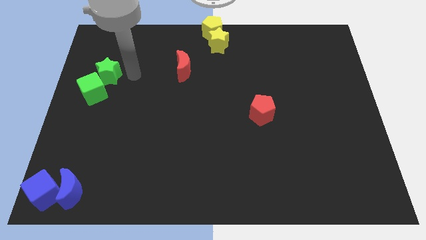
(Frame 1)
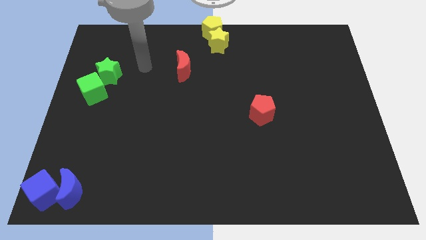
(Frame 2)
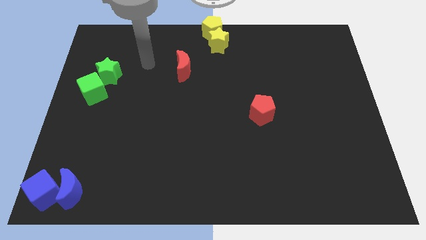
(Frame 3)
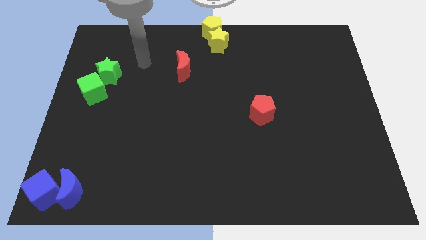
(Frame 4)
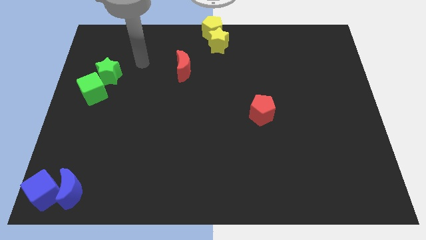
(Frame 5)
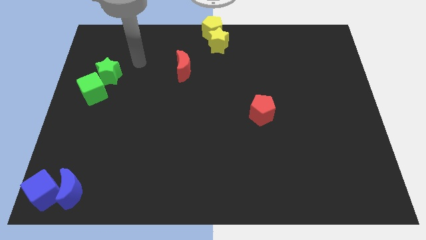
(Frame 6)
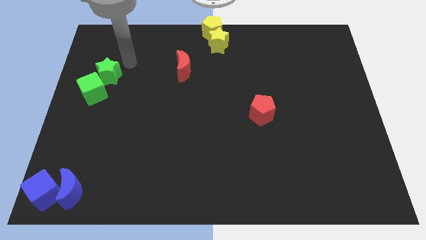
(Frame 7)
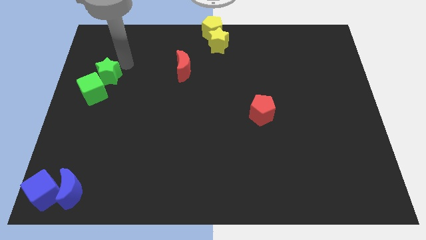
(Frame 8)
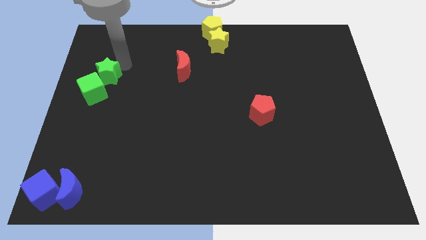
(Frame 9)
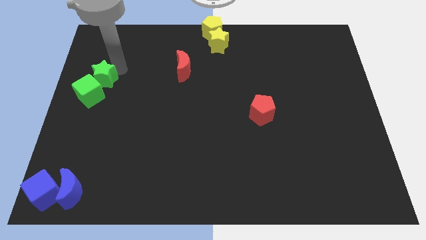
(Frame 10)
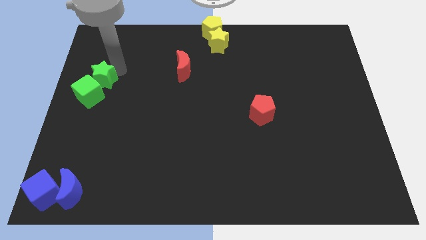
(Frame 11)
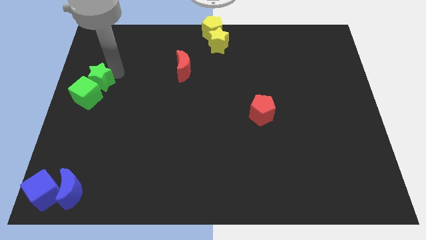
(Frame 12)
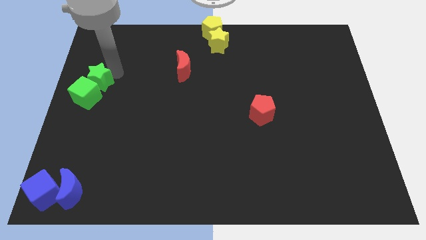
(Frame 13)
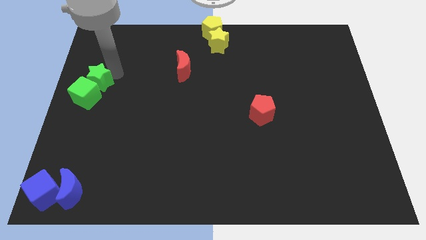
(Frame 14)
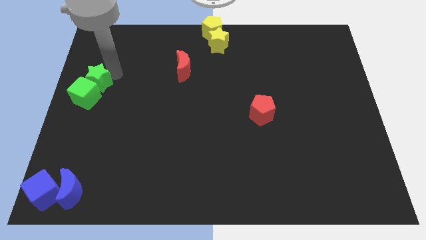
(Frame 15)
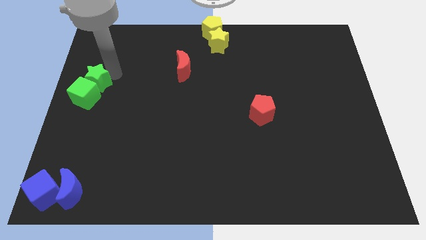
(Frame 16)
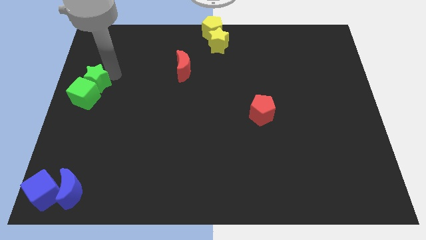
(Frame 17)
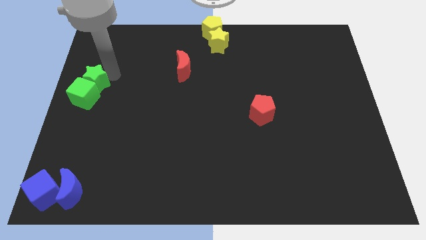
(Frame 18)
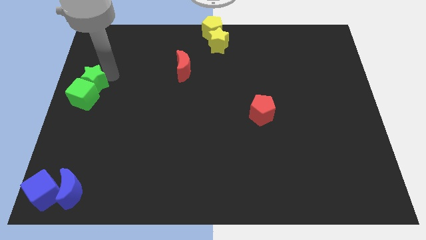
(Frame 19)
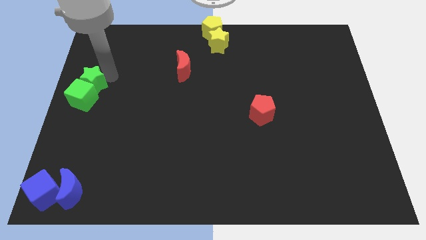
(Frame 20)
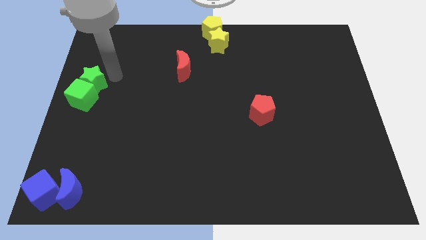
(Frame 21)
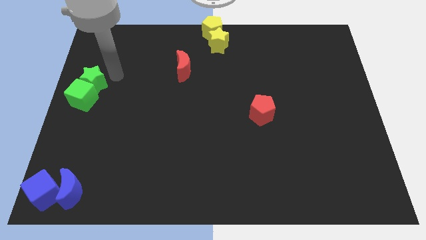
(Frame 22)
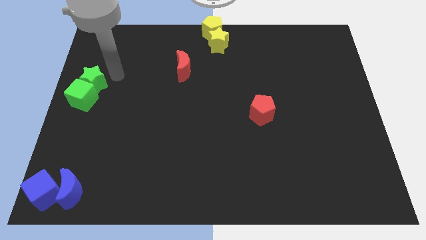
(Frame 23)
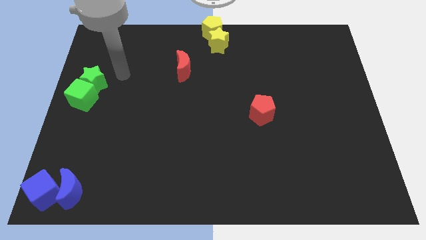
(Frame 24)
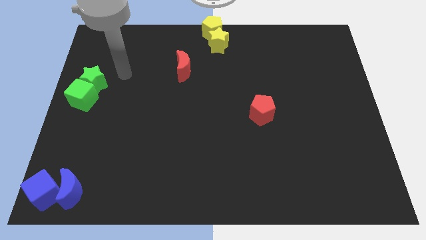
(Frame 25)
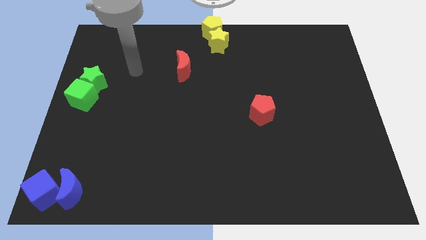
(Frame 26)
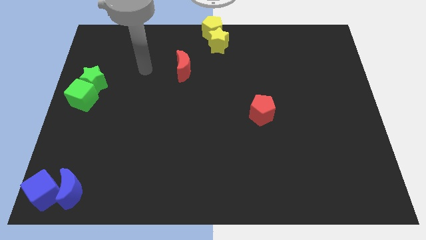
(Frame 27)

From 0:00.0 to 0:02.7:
move the green blocks center left corner of the board

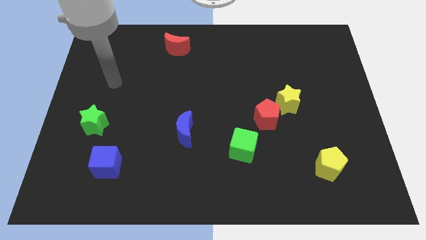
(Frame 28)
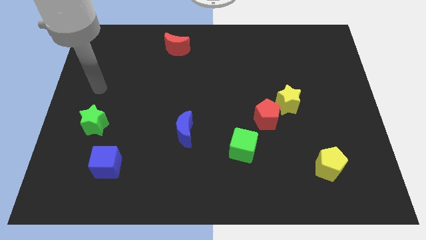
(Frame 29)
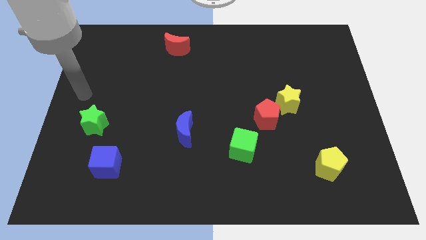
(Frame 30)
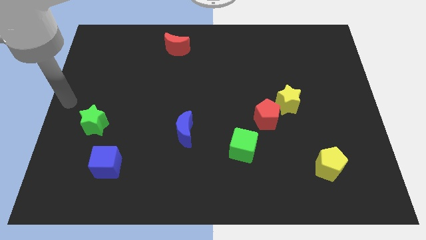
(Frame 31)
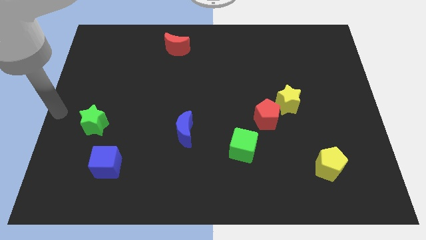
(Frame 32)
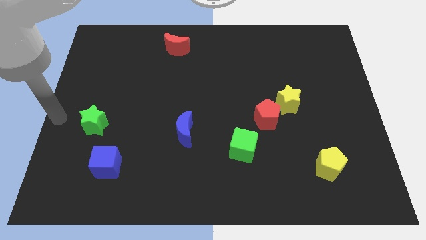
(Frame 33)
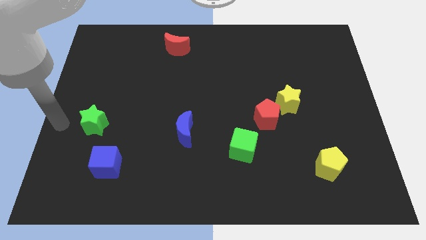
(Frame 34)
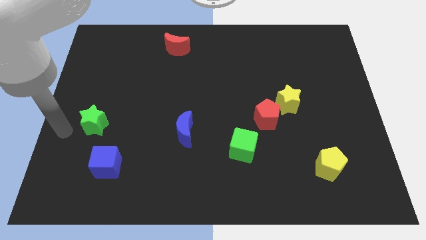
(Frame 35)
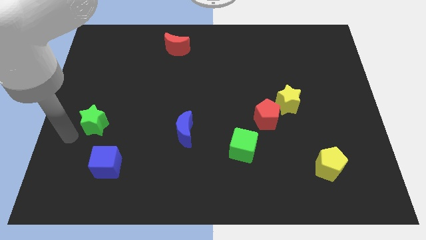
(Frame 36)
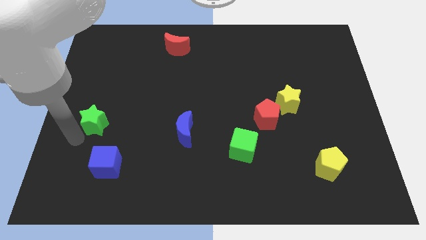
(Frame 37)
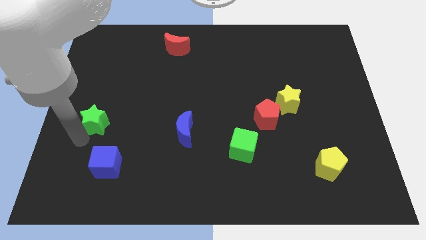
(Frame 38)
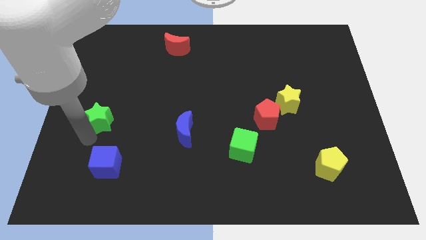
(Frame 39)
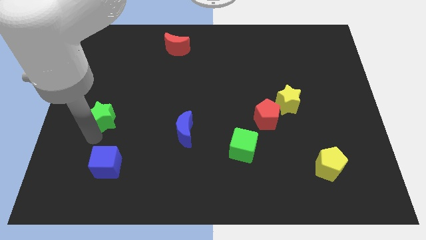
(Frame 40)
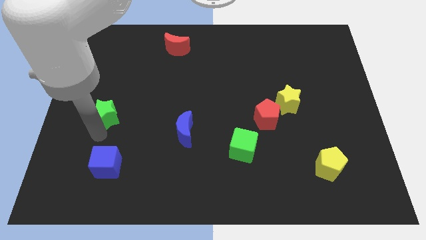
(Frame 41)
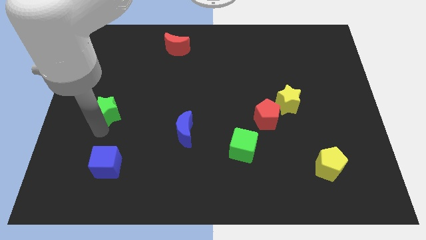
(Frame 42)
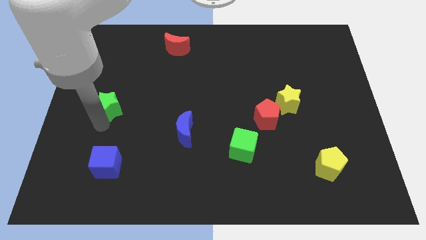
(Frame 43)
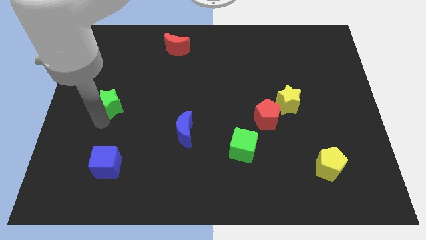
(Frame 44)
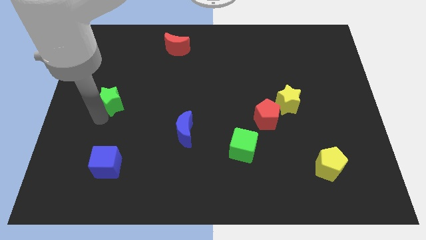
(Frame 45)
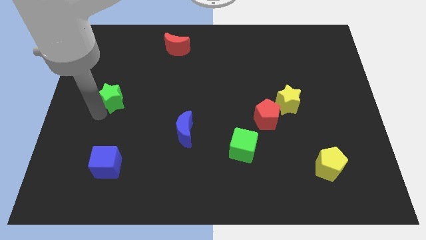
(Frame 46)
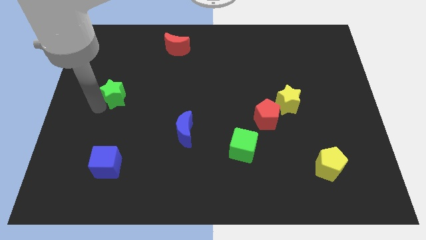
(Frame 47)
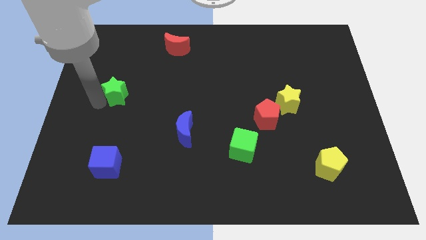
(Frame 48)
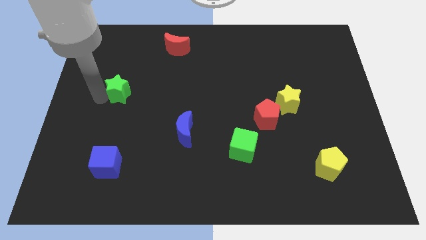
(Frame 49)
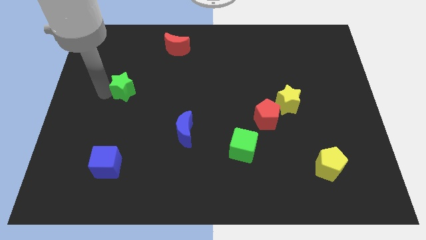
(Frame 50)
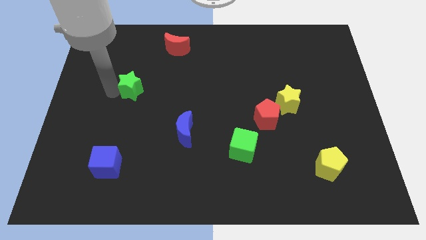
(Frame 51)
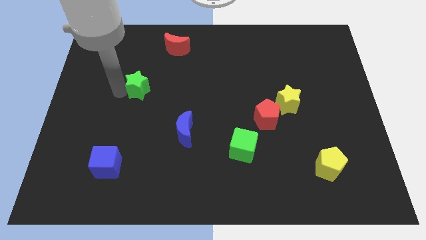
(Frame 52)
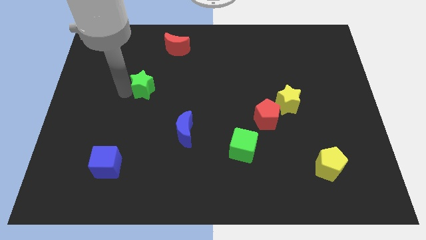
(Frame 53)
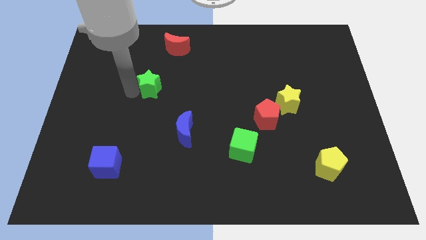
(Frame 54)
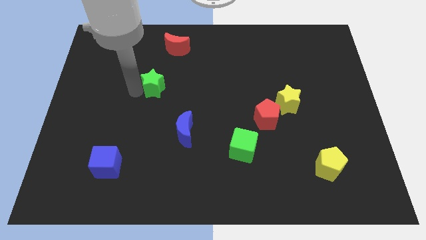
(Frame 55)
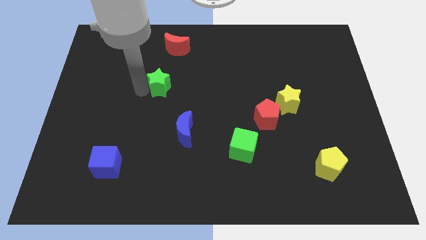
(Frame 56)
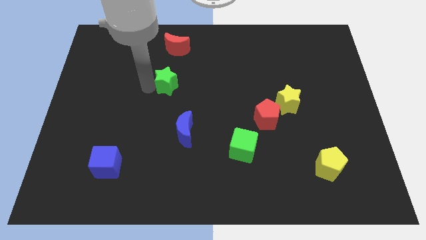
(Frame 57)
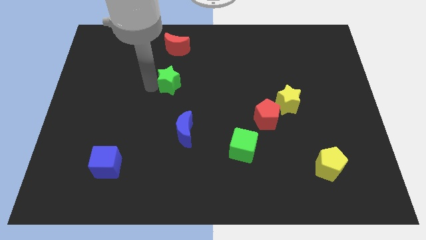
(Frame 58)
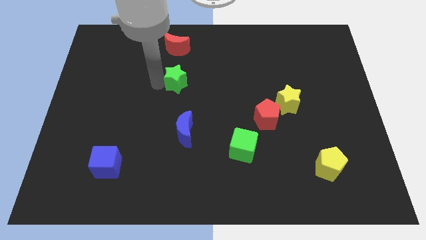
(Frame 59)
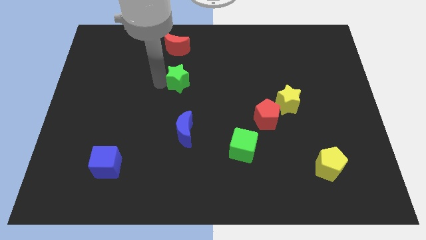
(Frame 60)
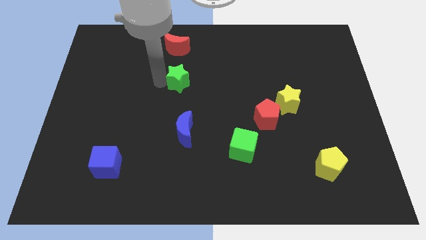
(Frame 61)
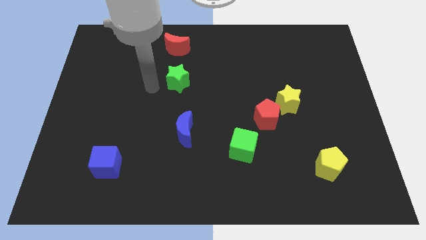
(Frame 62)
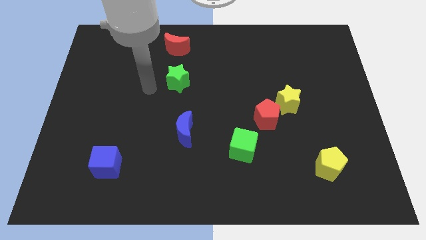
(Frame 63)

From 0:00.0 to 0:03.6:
place the green star below the red crescent

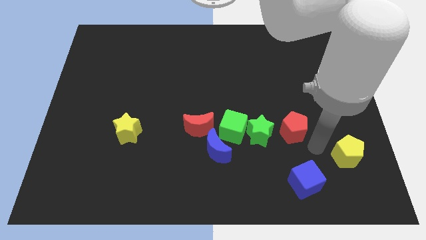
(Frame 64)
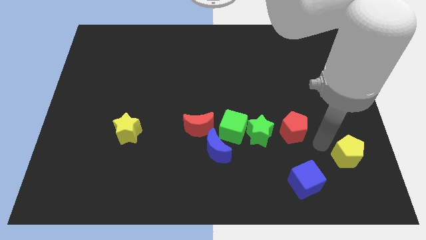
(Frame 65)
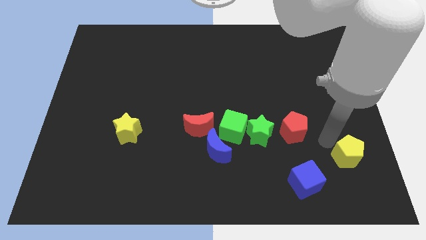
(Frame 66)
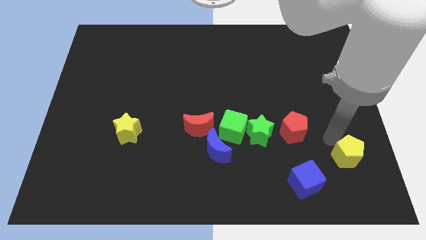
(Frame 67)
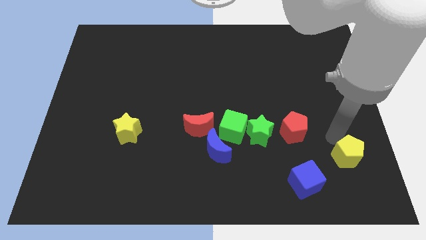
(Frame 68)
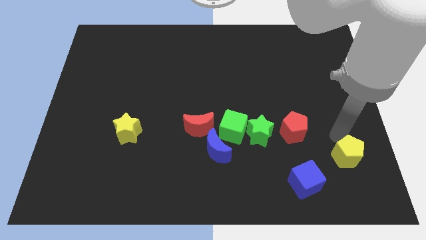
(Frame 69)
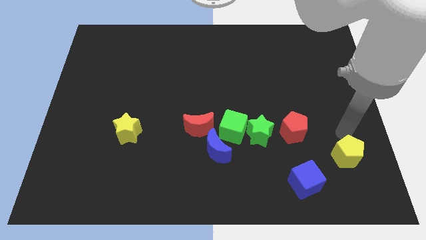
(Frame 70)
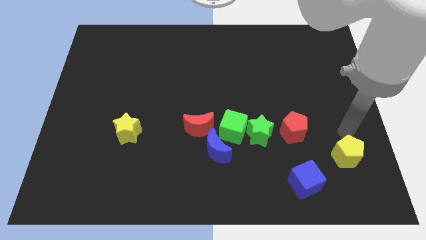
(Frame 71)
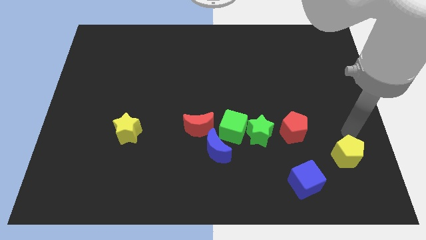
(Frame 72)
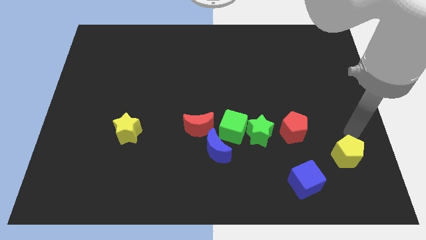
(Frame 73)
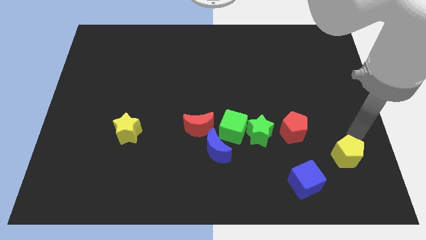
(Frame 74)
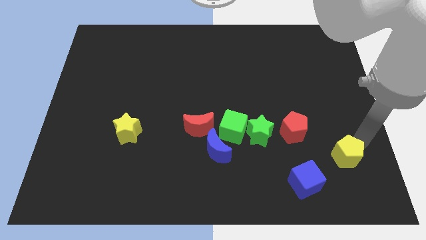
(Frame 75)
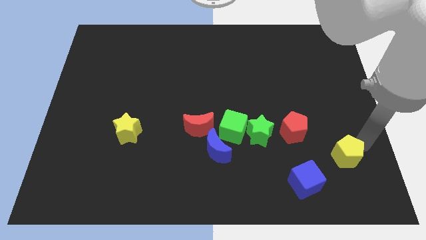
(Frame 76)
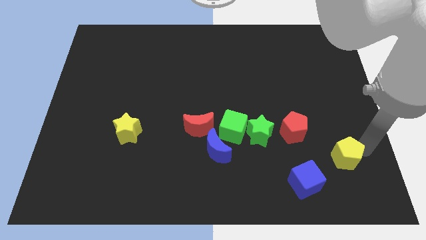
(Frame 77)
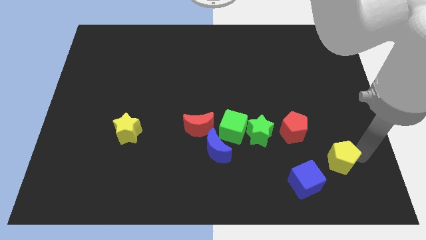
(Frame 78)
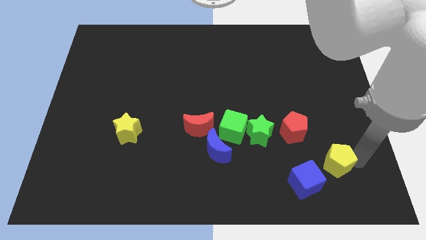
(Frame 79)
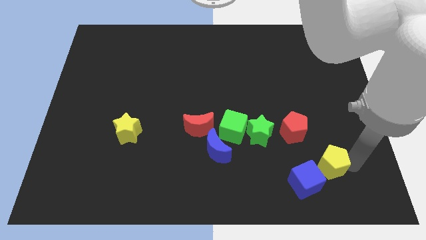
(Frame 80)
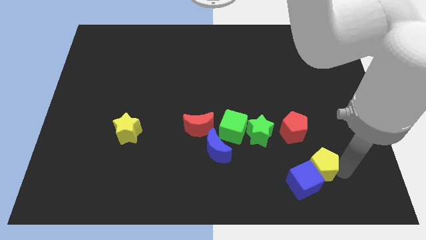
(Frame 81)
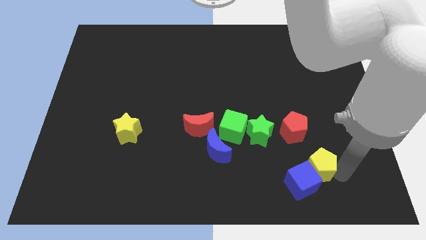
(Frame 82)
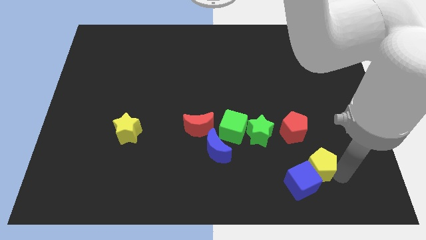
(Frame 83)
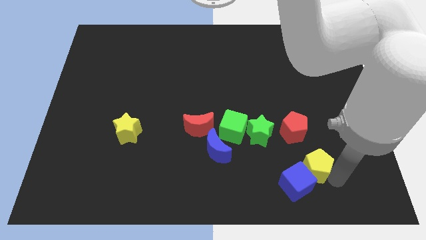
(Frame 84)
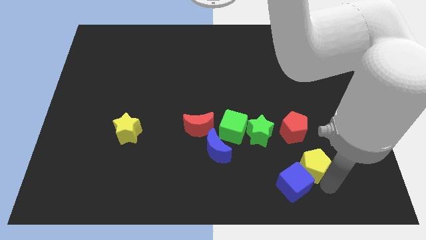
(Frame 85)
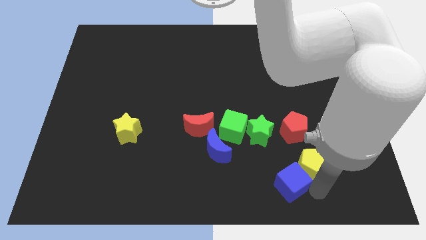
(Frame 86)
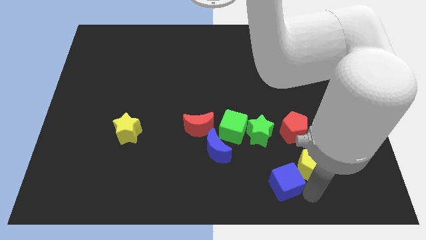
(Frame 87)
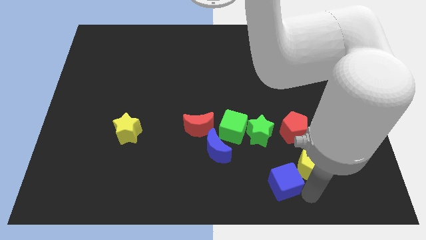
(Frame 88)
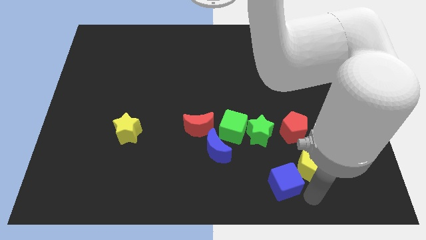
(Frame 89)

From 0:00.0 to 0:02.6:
push the yellow pentagon into blue cube

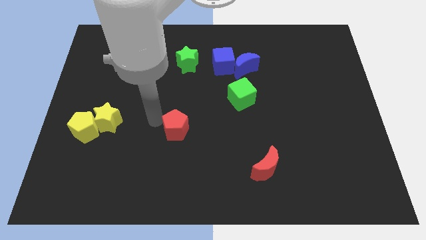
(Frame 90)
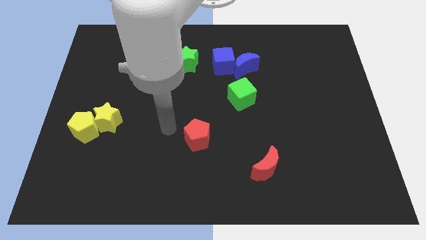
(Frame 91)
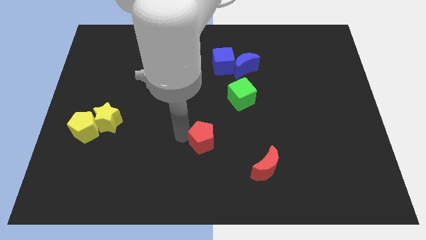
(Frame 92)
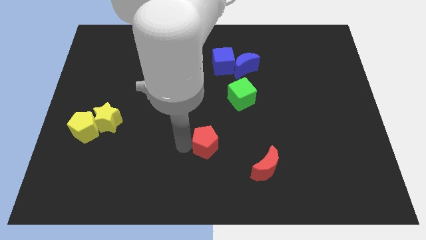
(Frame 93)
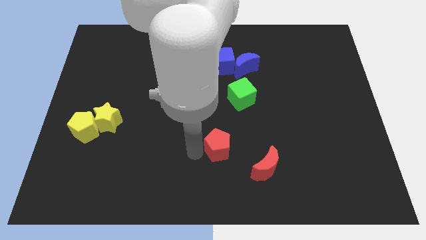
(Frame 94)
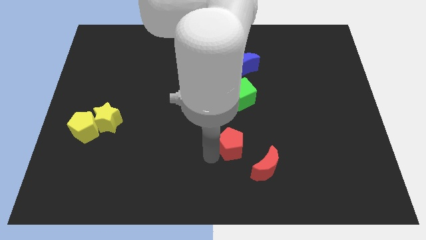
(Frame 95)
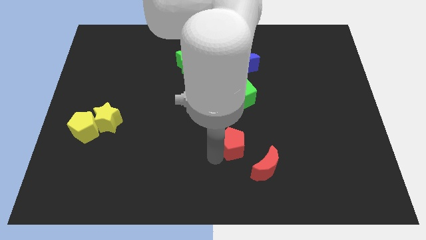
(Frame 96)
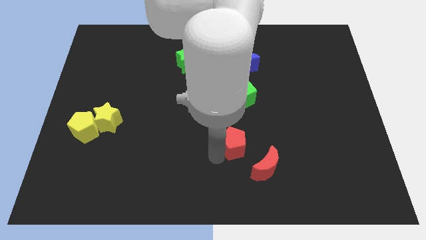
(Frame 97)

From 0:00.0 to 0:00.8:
place red pentagon diagonally above red crescent
